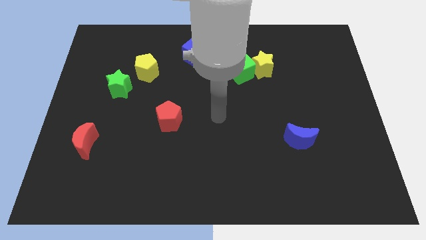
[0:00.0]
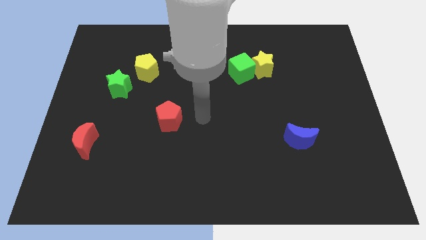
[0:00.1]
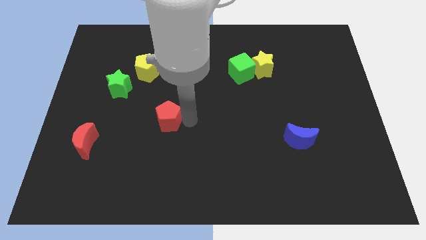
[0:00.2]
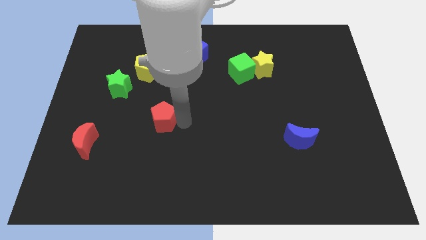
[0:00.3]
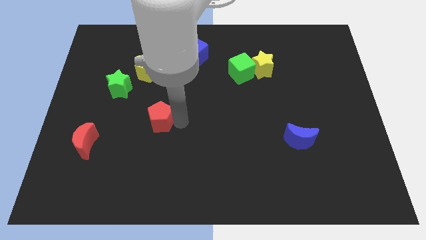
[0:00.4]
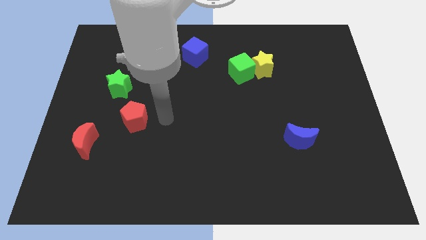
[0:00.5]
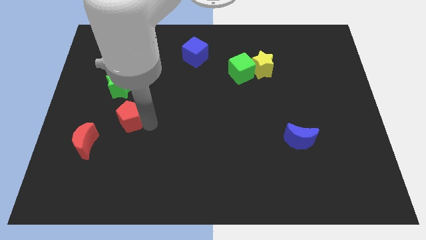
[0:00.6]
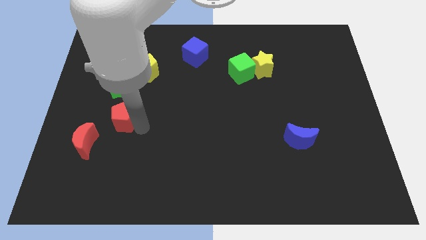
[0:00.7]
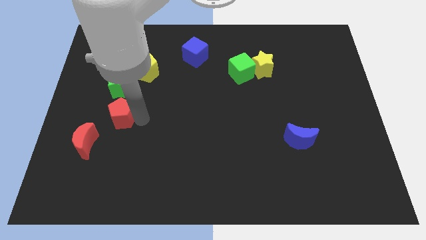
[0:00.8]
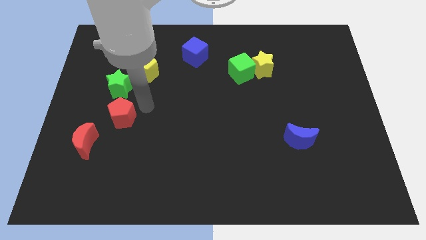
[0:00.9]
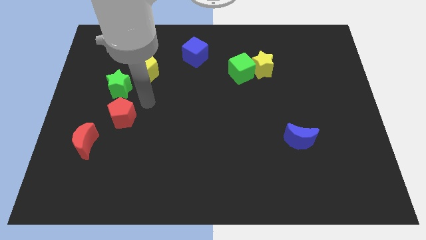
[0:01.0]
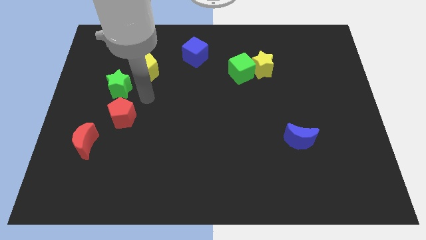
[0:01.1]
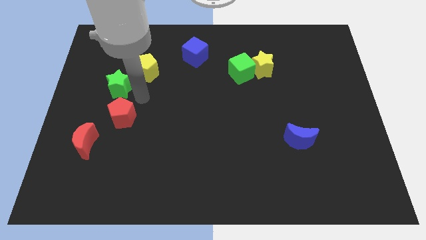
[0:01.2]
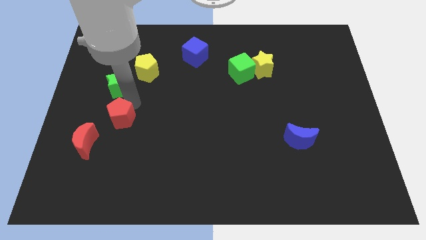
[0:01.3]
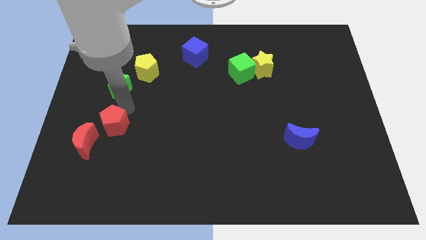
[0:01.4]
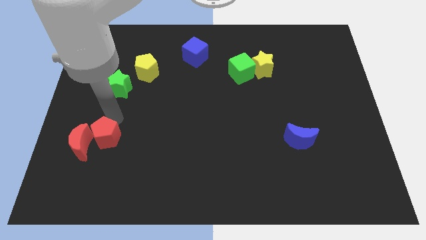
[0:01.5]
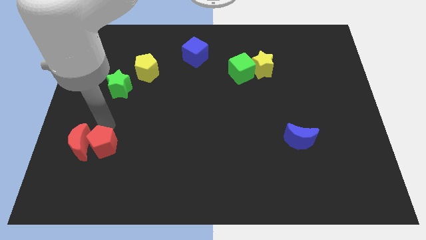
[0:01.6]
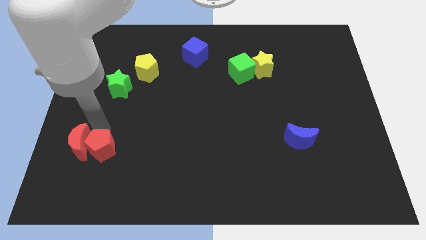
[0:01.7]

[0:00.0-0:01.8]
move red pentagon to the right of red moon

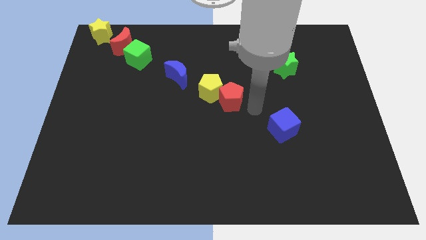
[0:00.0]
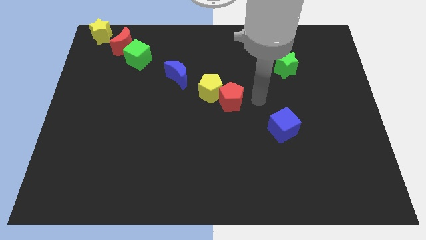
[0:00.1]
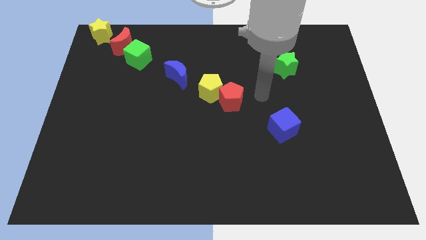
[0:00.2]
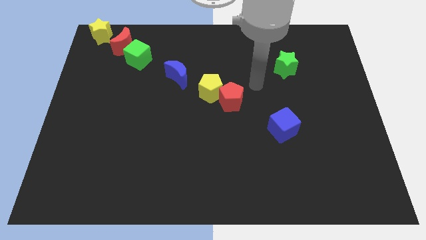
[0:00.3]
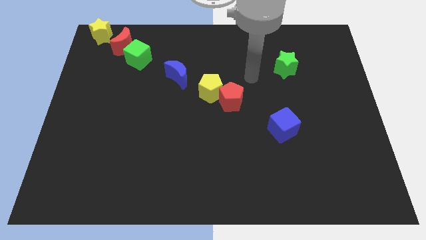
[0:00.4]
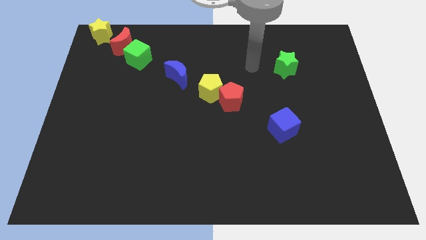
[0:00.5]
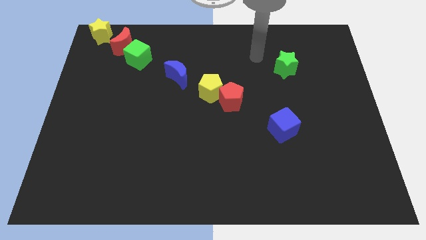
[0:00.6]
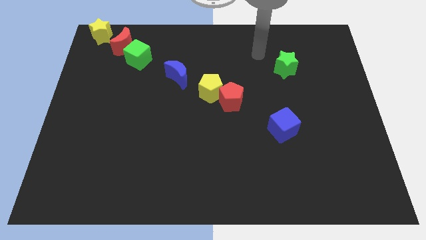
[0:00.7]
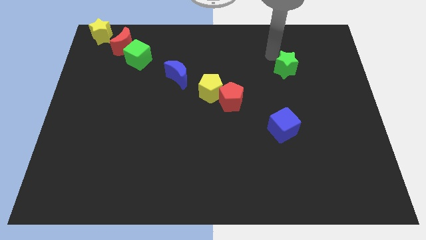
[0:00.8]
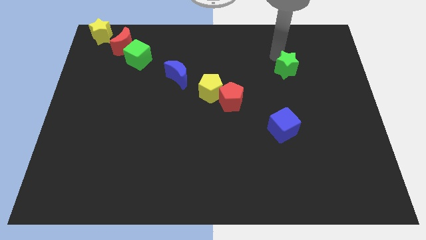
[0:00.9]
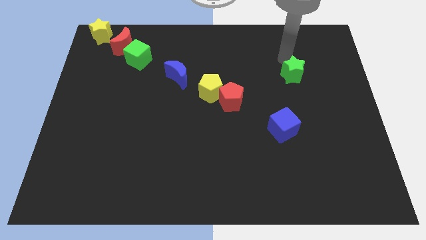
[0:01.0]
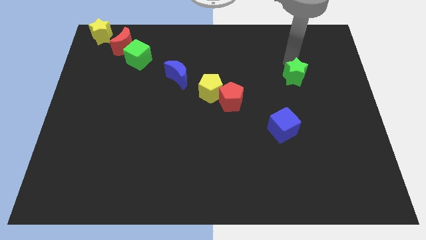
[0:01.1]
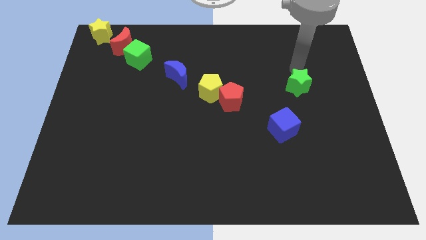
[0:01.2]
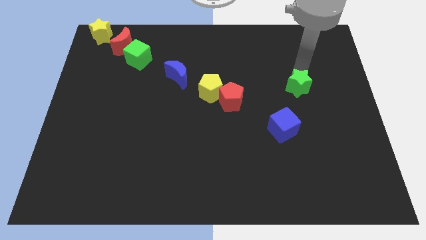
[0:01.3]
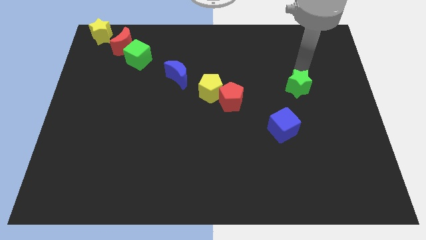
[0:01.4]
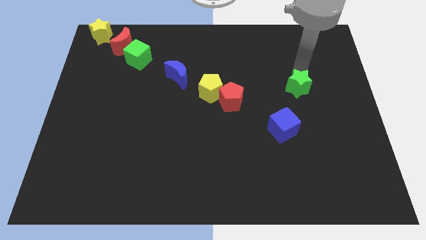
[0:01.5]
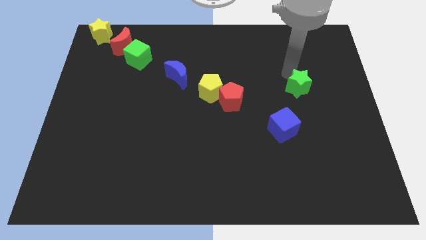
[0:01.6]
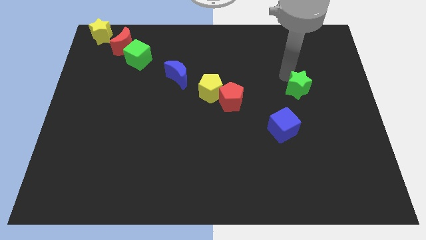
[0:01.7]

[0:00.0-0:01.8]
push the green star parallel to the red pentagon

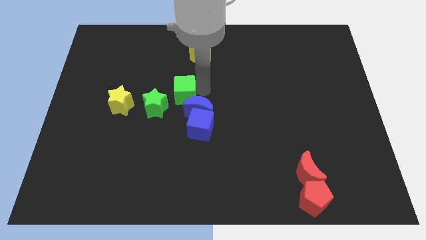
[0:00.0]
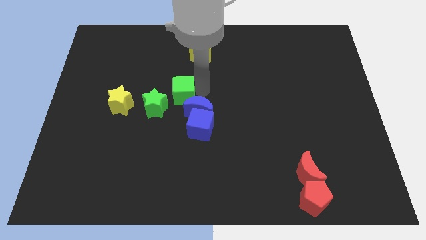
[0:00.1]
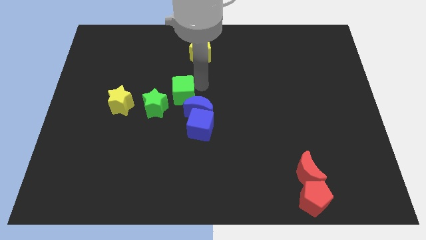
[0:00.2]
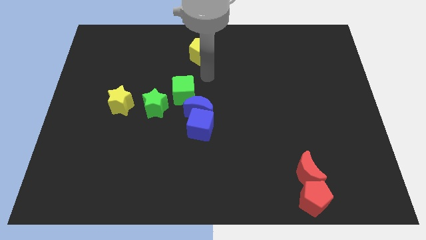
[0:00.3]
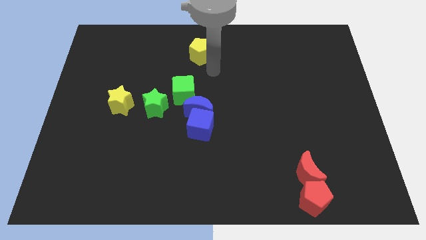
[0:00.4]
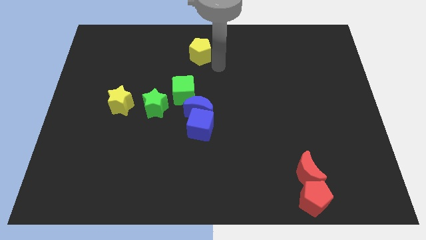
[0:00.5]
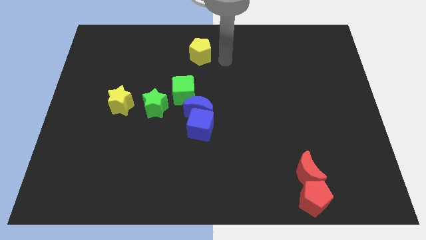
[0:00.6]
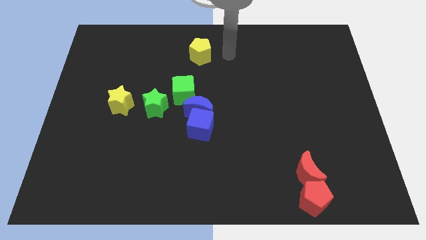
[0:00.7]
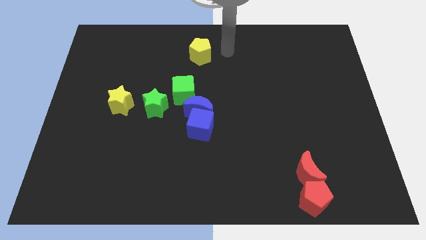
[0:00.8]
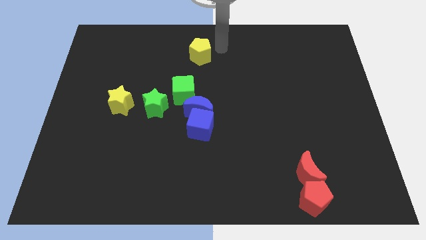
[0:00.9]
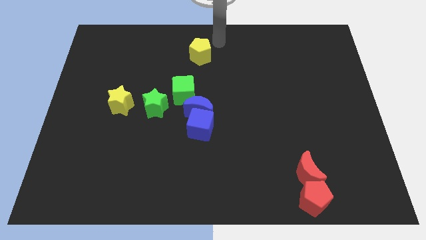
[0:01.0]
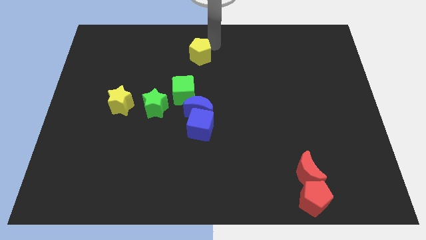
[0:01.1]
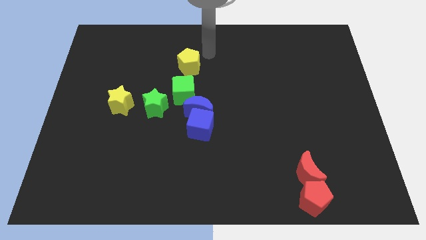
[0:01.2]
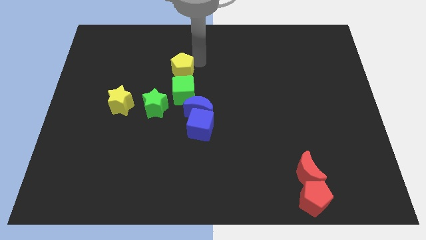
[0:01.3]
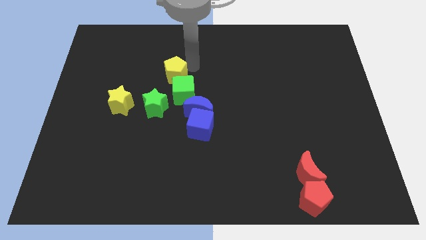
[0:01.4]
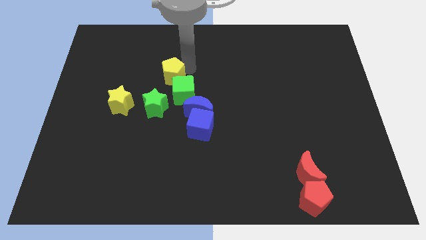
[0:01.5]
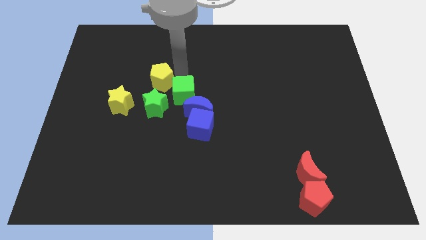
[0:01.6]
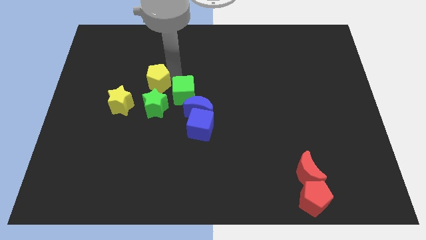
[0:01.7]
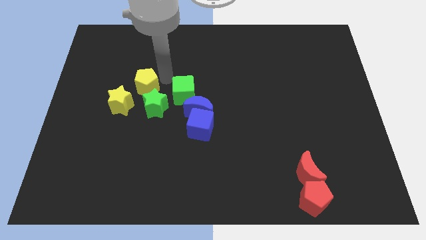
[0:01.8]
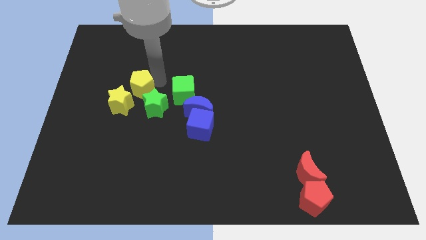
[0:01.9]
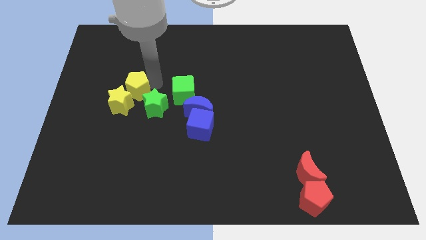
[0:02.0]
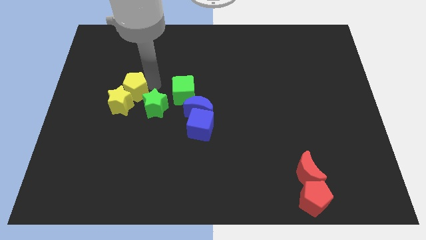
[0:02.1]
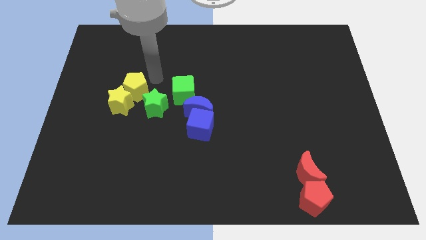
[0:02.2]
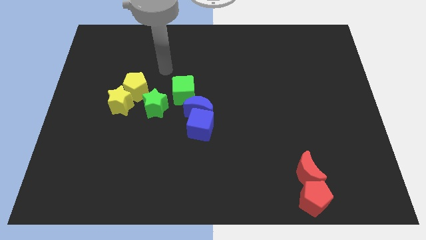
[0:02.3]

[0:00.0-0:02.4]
drag the yellow pentagon into the yellow star

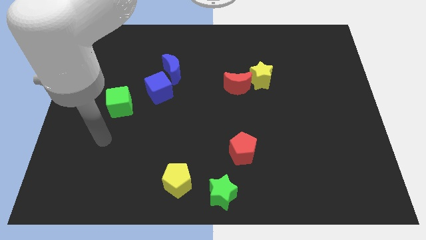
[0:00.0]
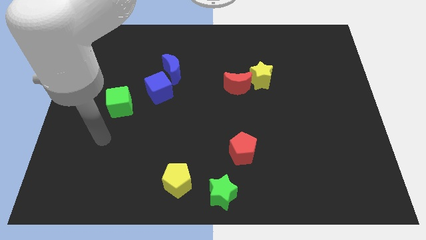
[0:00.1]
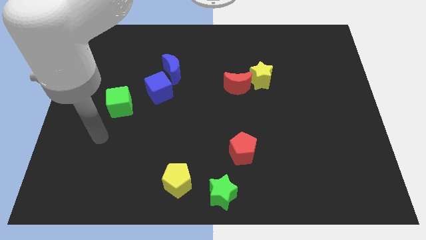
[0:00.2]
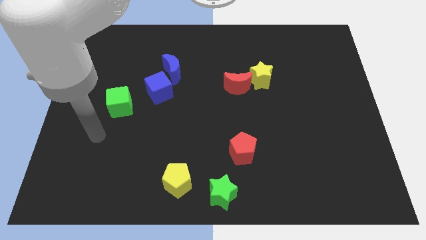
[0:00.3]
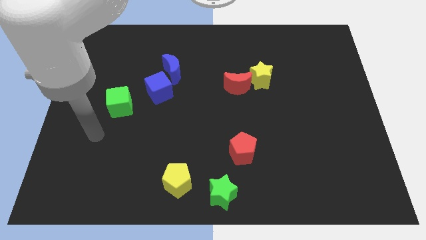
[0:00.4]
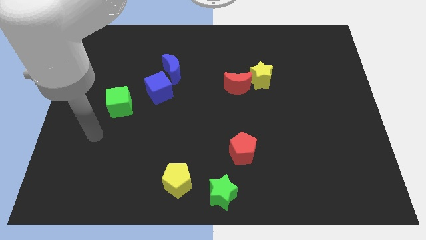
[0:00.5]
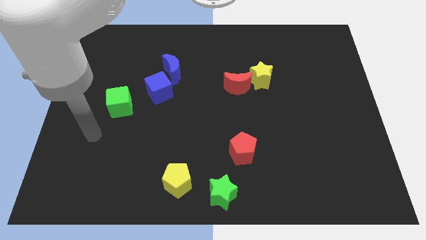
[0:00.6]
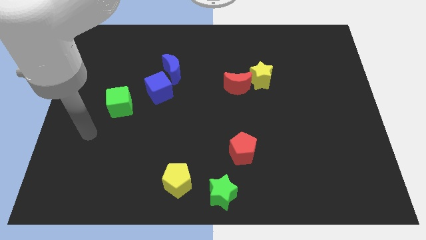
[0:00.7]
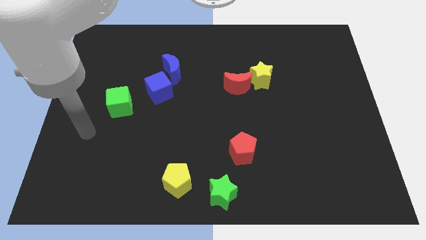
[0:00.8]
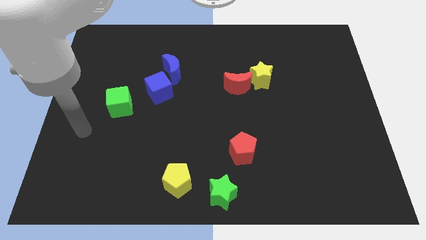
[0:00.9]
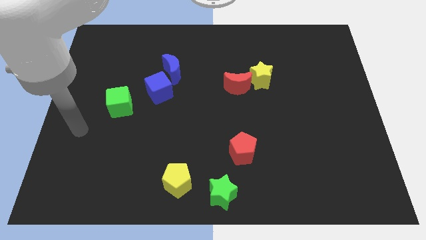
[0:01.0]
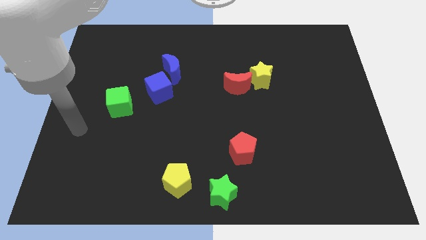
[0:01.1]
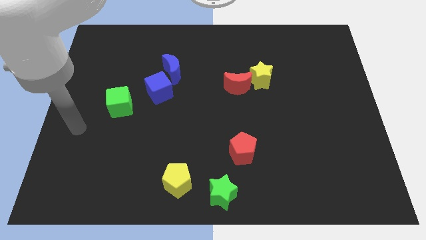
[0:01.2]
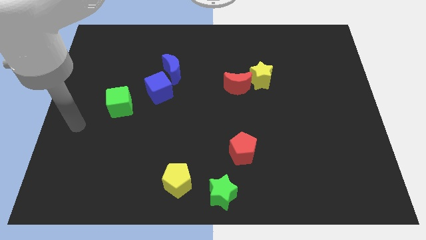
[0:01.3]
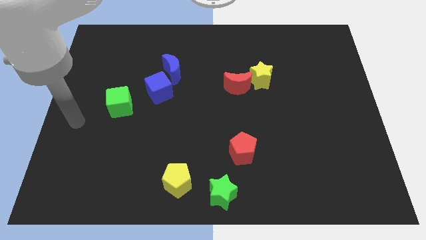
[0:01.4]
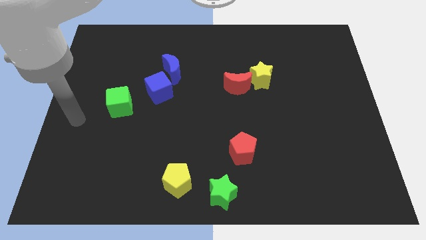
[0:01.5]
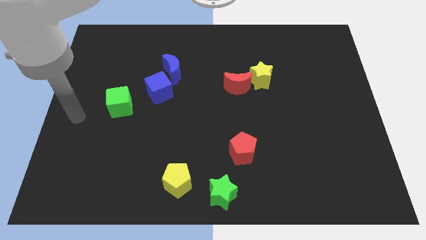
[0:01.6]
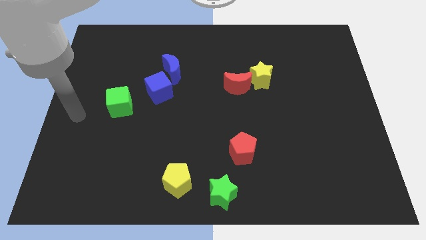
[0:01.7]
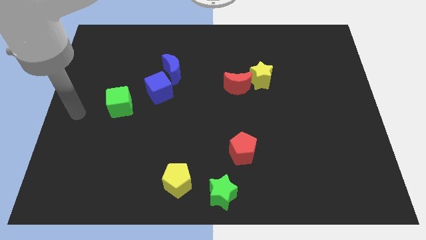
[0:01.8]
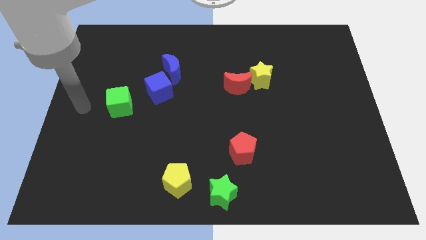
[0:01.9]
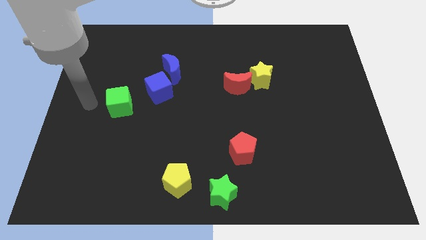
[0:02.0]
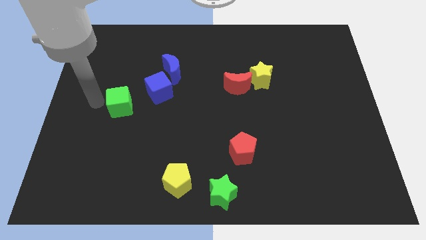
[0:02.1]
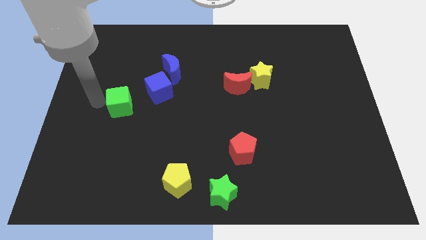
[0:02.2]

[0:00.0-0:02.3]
point your arm at the left of the green cube

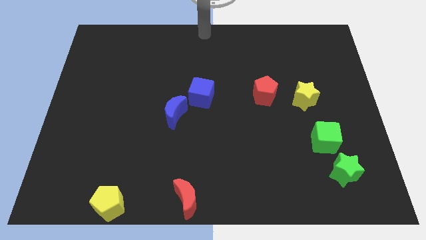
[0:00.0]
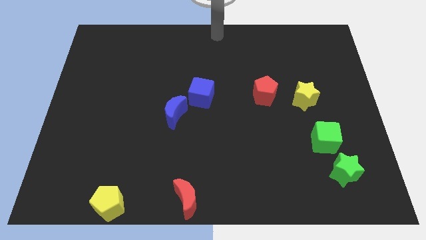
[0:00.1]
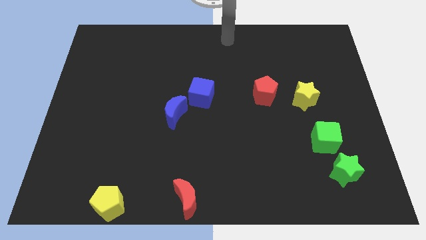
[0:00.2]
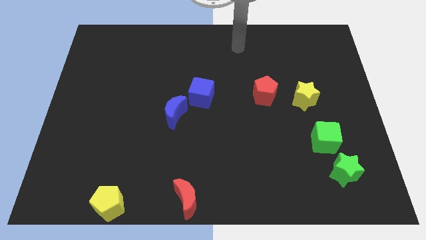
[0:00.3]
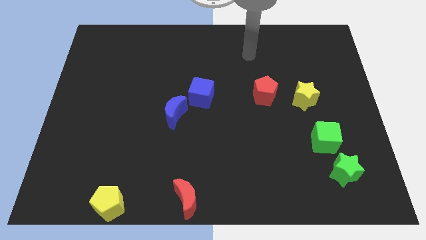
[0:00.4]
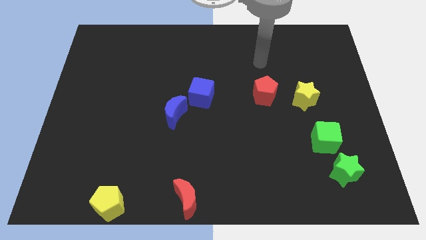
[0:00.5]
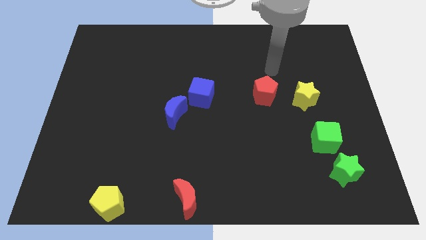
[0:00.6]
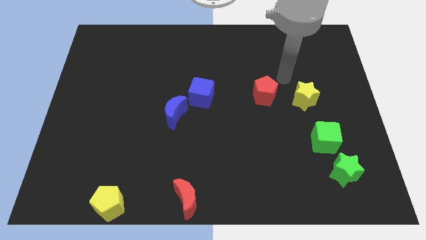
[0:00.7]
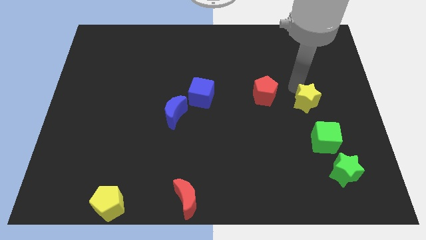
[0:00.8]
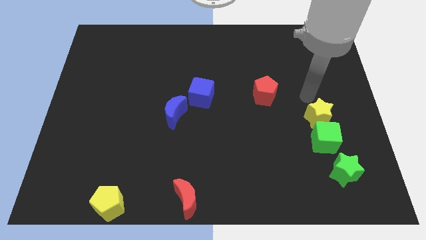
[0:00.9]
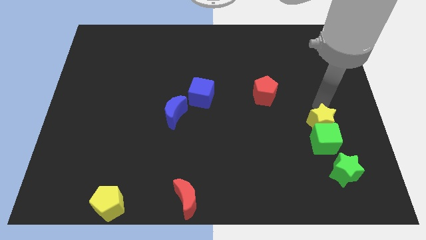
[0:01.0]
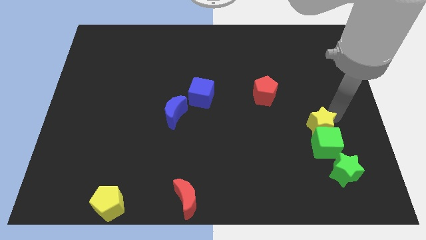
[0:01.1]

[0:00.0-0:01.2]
move the yellow star into the green cube
